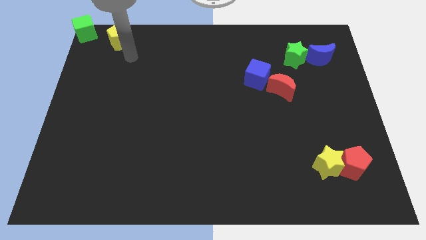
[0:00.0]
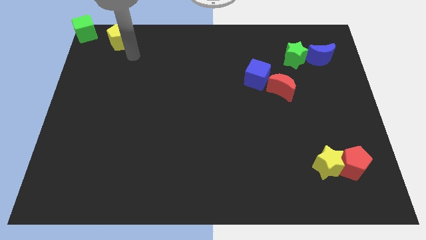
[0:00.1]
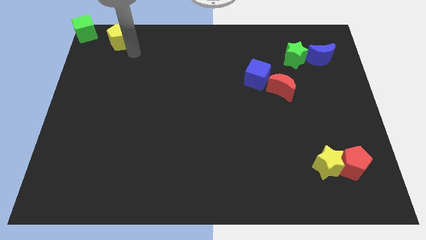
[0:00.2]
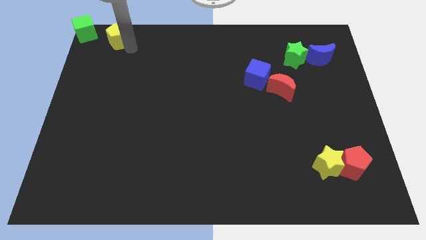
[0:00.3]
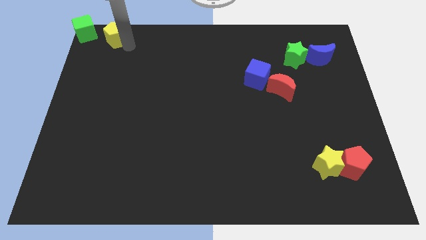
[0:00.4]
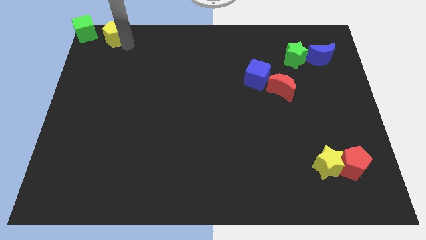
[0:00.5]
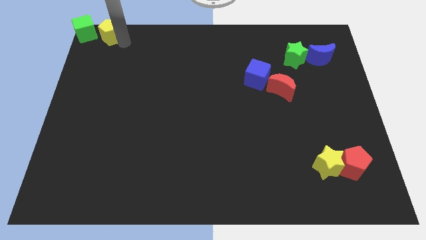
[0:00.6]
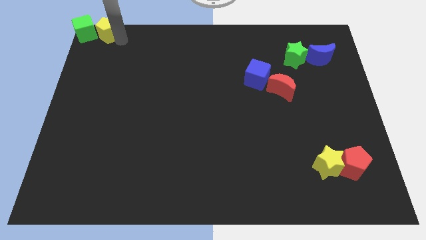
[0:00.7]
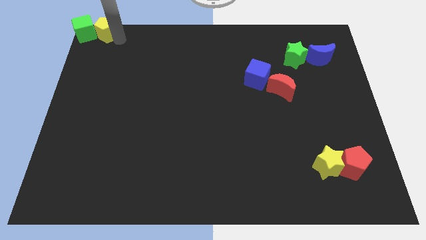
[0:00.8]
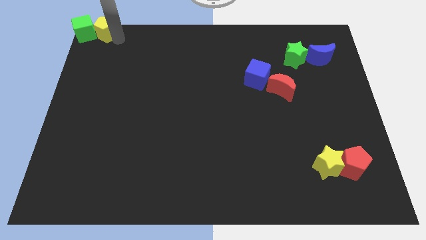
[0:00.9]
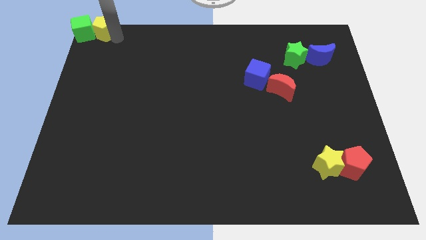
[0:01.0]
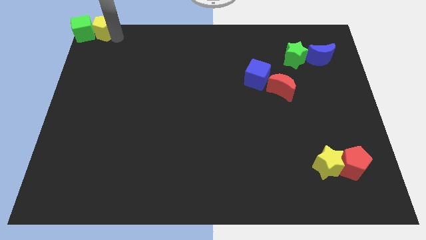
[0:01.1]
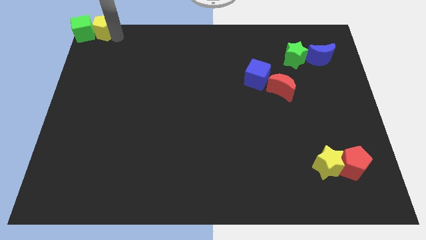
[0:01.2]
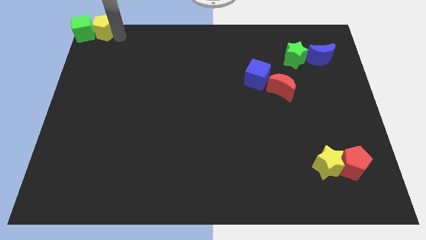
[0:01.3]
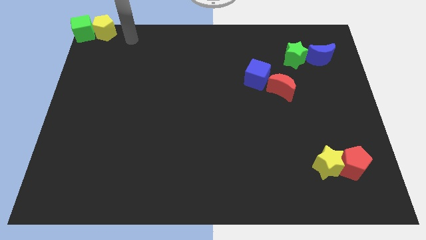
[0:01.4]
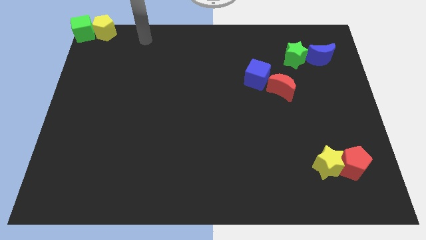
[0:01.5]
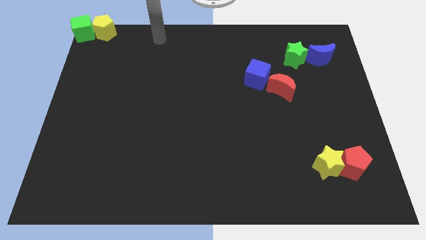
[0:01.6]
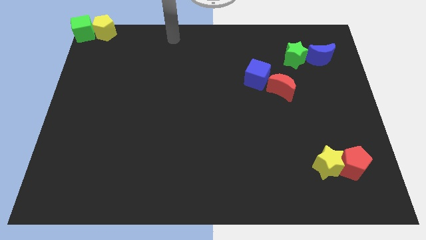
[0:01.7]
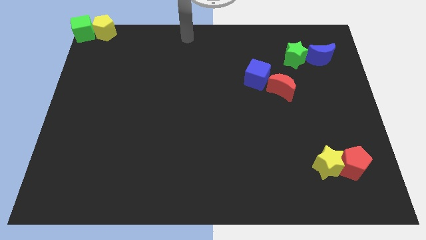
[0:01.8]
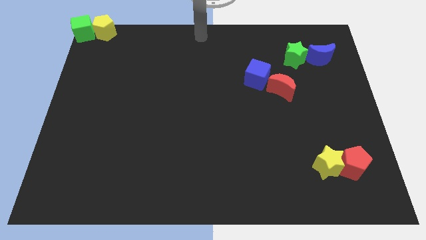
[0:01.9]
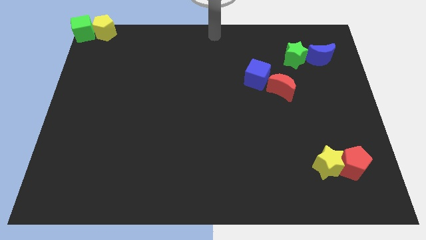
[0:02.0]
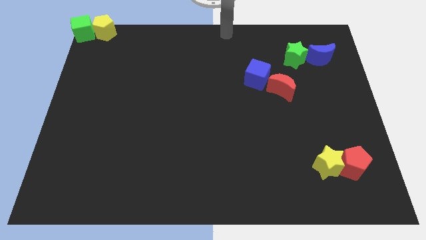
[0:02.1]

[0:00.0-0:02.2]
place the yellow pentagon right next to green cube

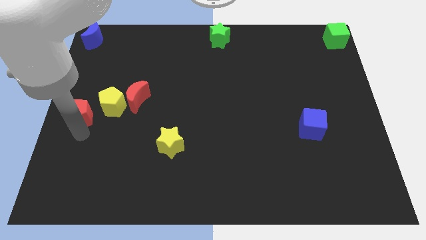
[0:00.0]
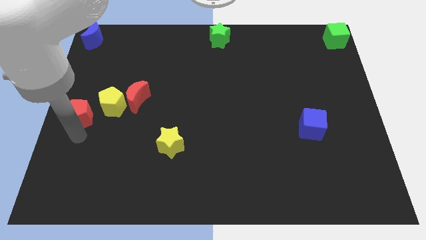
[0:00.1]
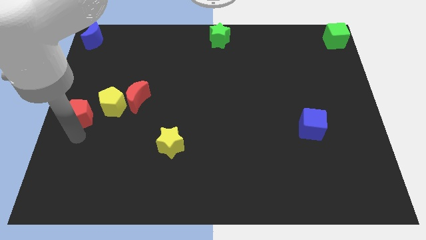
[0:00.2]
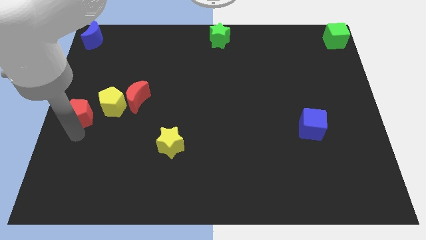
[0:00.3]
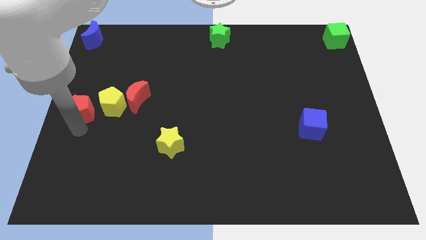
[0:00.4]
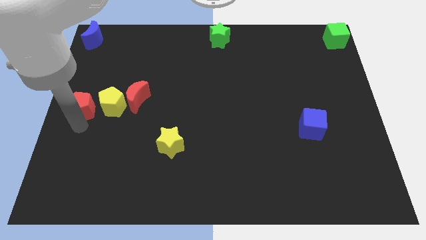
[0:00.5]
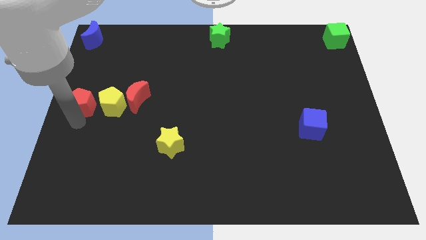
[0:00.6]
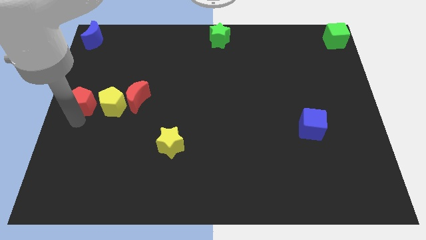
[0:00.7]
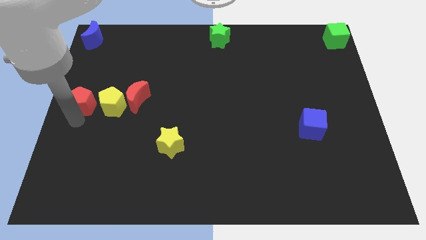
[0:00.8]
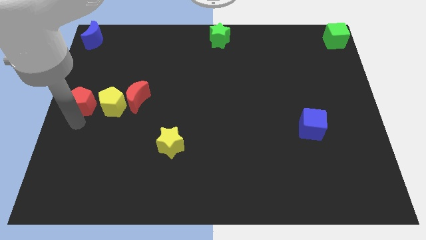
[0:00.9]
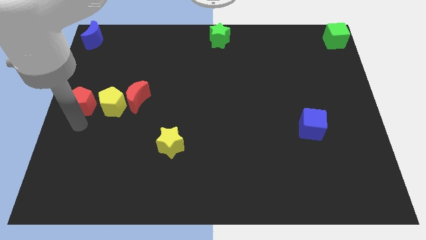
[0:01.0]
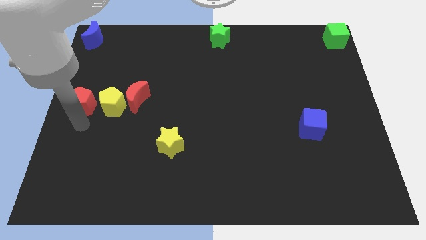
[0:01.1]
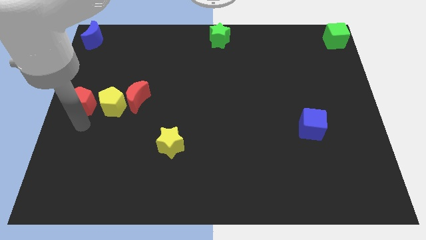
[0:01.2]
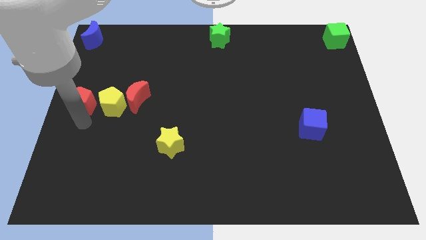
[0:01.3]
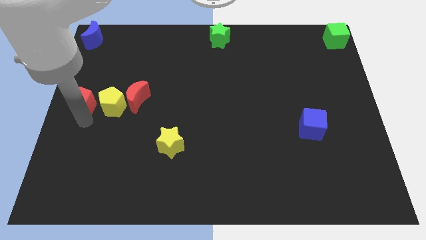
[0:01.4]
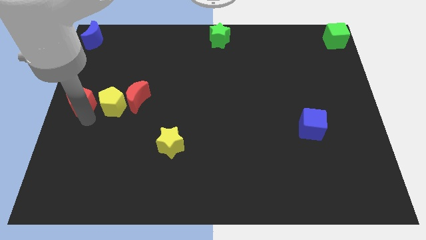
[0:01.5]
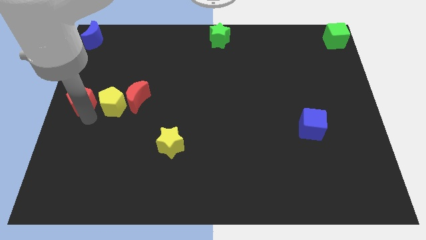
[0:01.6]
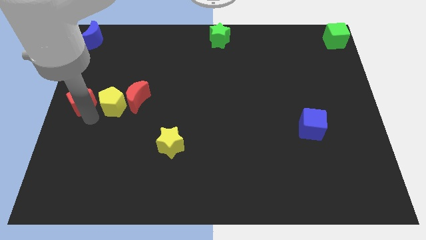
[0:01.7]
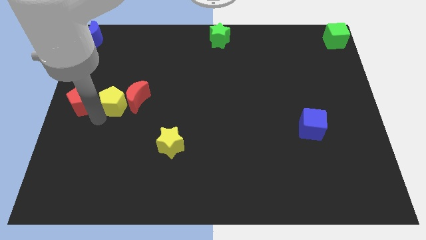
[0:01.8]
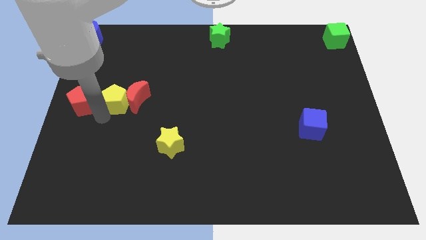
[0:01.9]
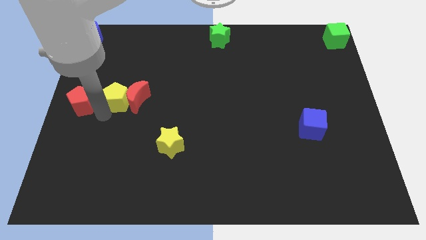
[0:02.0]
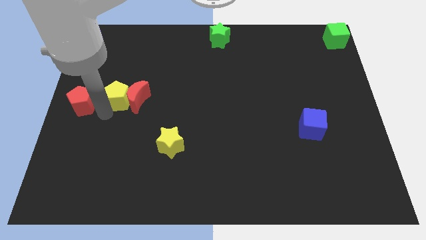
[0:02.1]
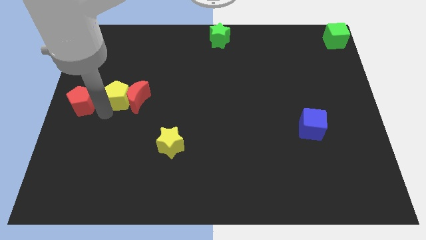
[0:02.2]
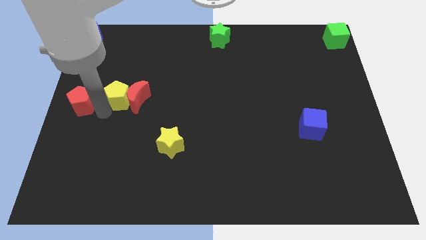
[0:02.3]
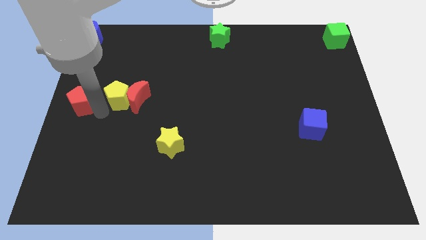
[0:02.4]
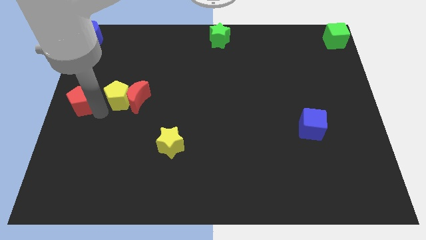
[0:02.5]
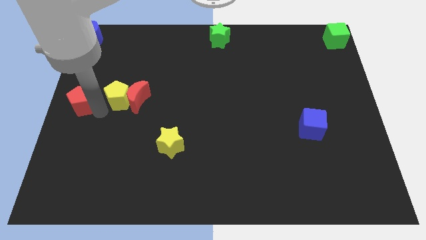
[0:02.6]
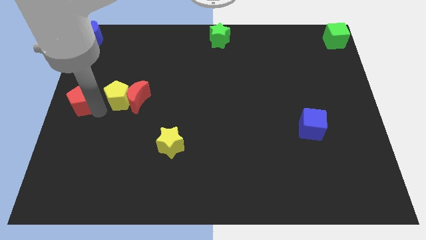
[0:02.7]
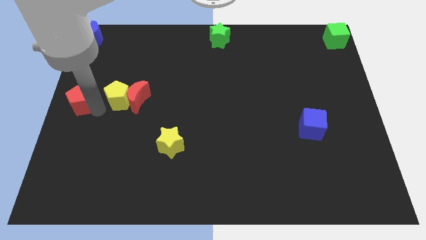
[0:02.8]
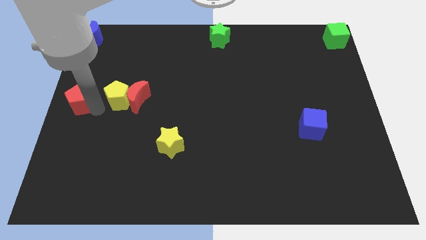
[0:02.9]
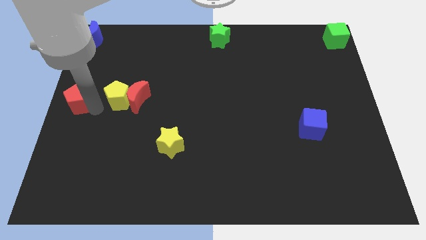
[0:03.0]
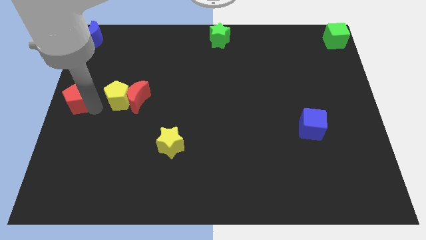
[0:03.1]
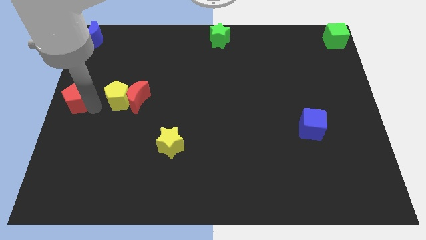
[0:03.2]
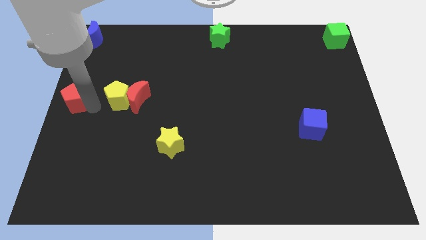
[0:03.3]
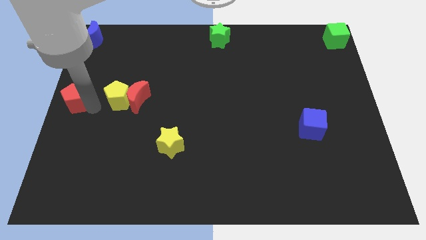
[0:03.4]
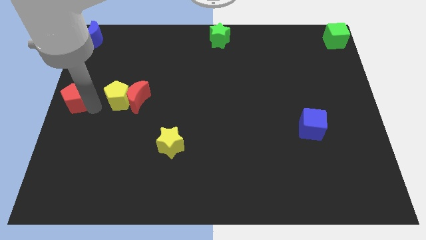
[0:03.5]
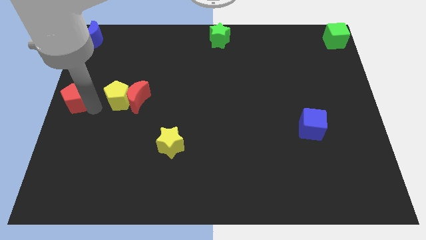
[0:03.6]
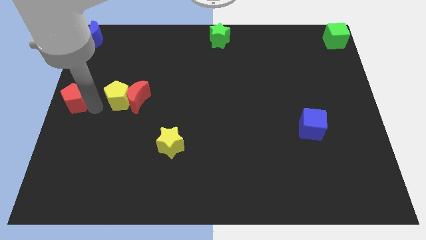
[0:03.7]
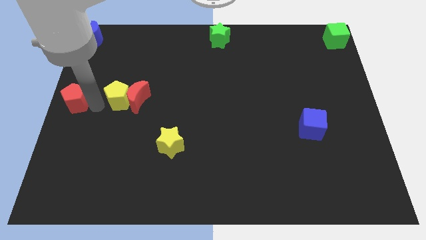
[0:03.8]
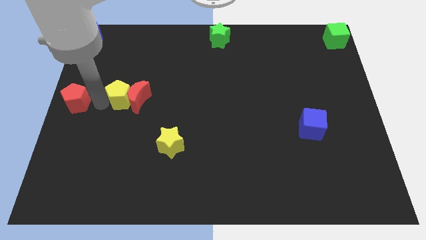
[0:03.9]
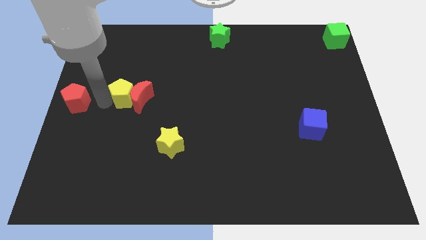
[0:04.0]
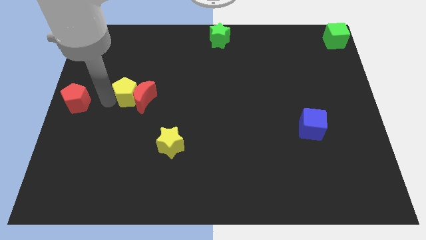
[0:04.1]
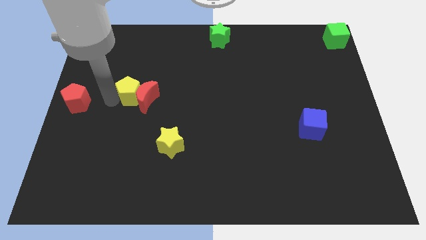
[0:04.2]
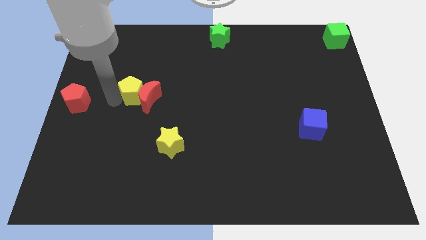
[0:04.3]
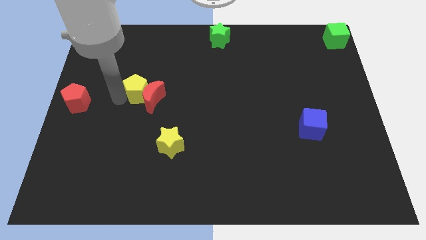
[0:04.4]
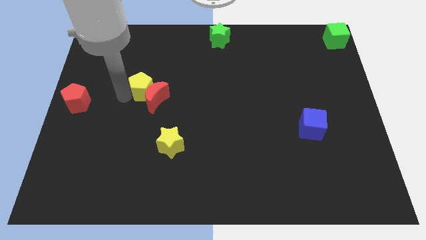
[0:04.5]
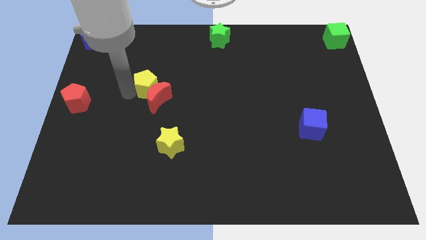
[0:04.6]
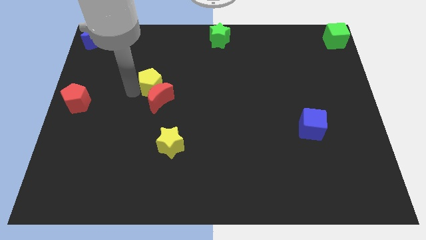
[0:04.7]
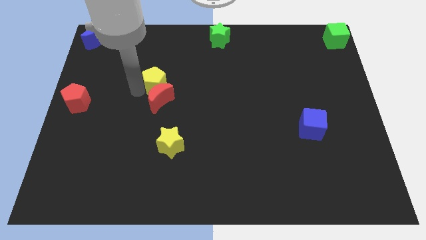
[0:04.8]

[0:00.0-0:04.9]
push yellow pentagon above the red moon

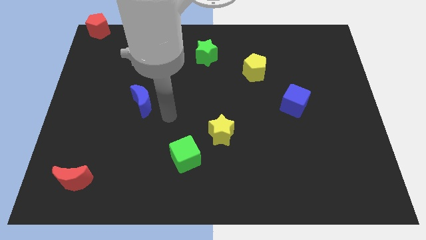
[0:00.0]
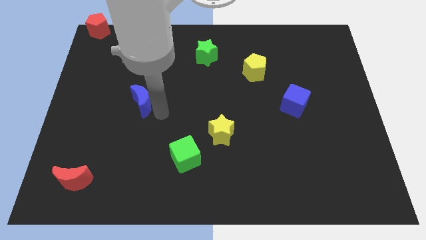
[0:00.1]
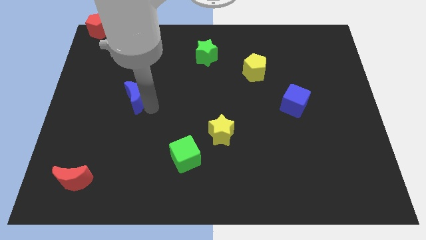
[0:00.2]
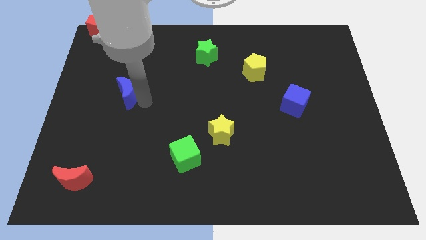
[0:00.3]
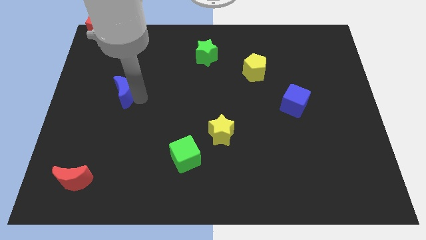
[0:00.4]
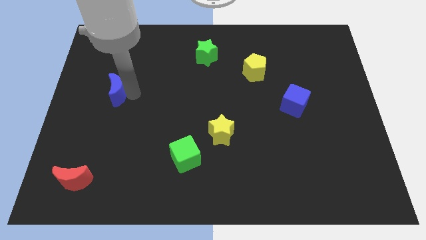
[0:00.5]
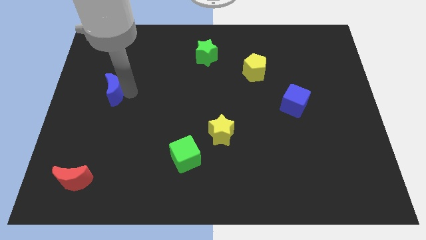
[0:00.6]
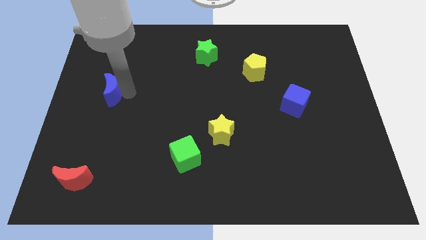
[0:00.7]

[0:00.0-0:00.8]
move blue moon to the left side of the board

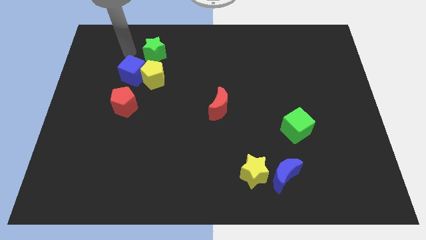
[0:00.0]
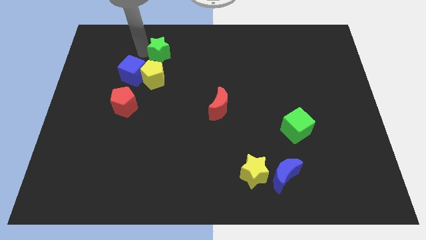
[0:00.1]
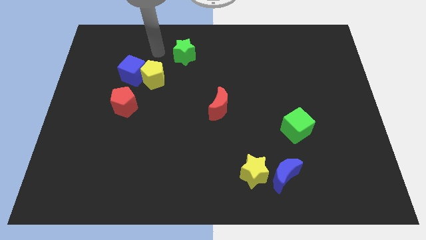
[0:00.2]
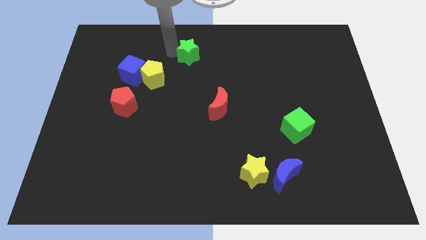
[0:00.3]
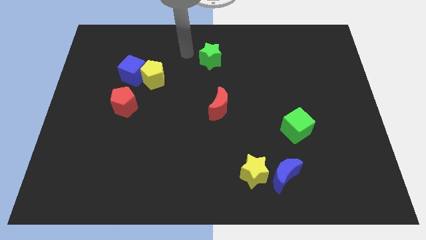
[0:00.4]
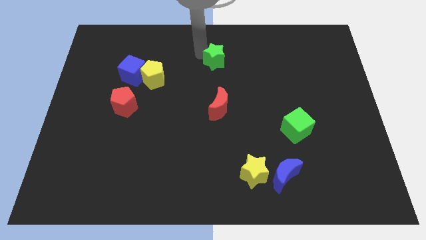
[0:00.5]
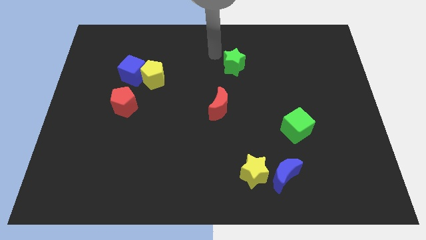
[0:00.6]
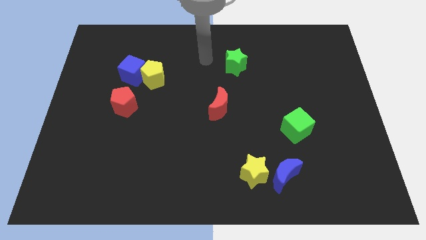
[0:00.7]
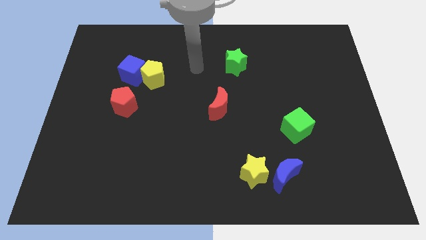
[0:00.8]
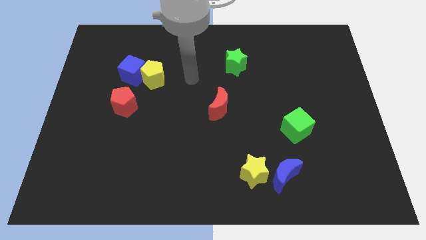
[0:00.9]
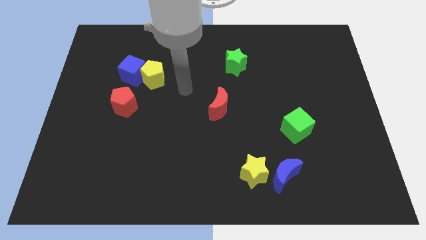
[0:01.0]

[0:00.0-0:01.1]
move the green star to the top right side of the red moon
